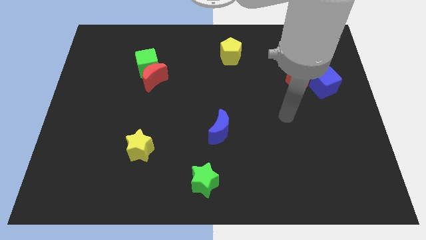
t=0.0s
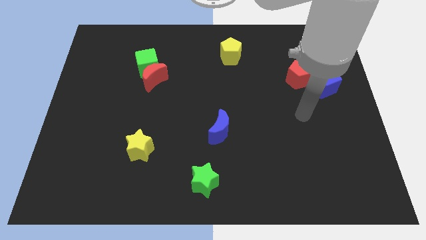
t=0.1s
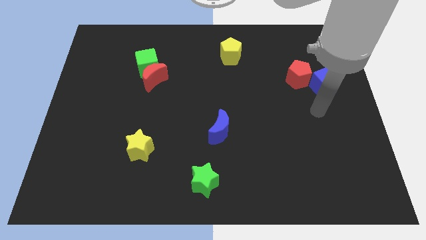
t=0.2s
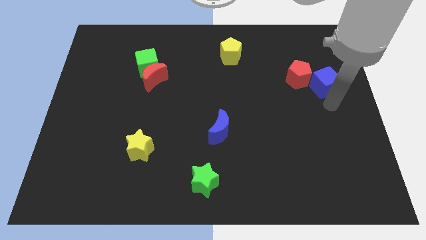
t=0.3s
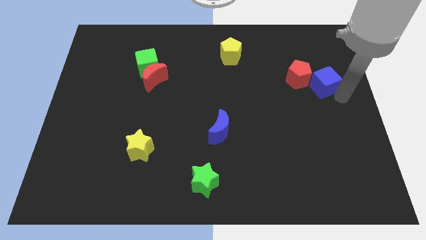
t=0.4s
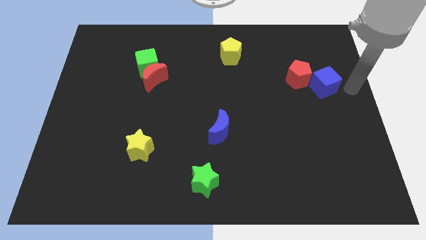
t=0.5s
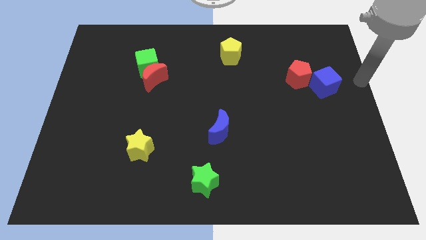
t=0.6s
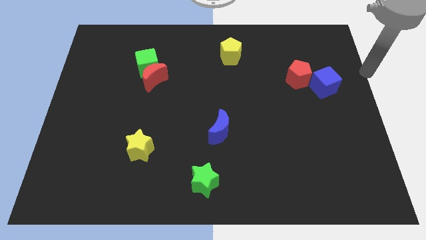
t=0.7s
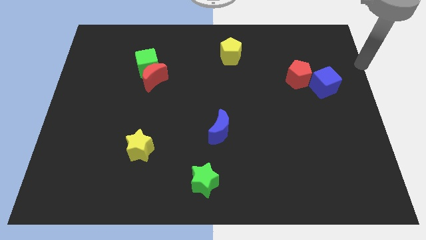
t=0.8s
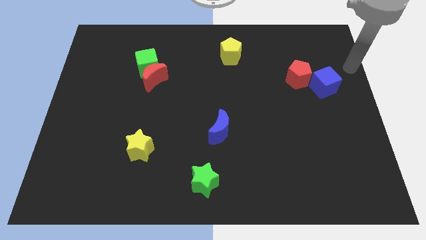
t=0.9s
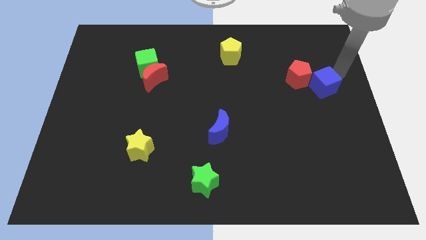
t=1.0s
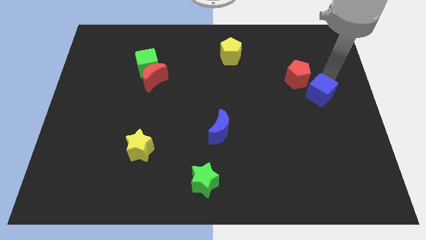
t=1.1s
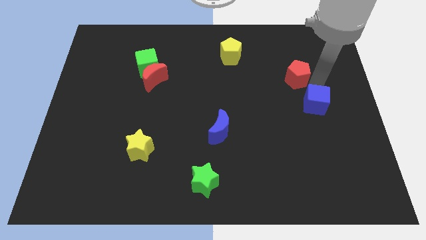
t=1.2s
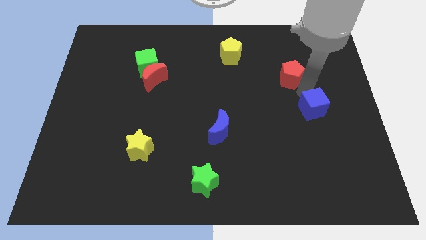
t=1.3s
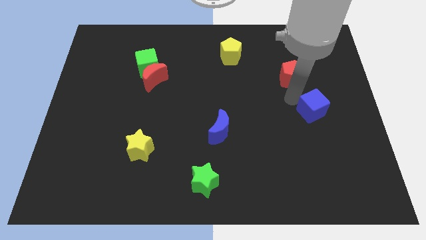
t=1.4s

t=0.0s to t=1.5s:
go and separate the blue cube from the red pentagon

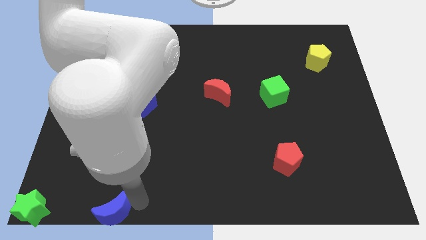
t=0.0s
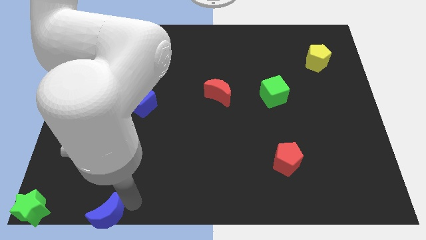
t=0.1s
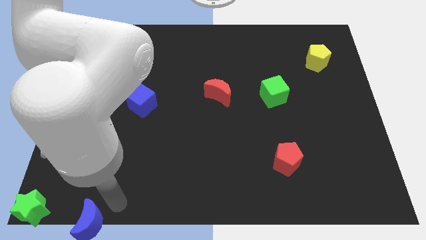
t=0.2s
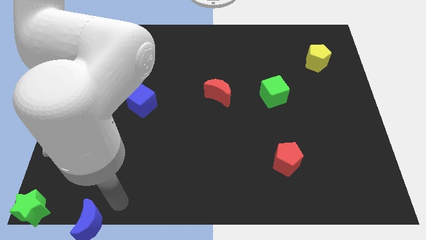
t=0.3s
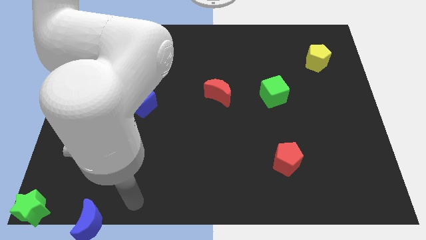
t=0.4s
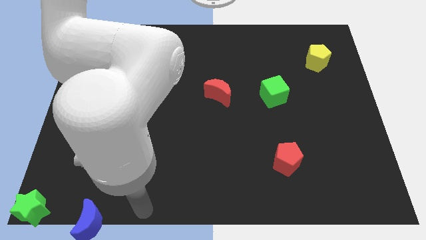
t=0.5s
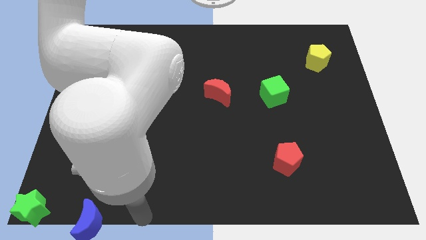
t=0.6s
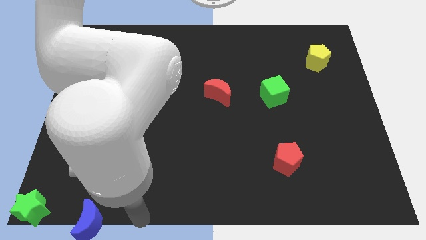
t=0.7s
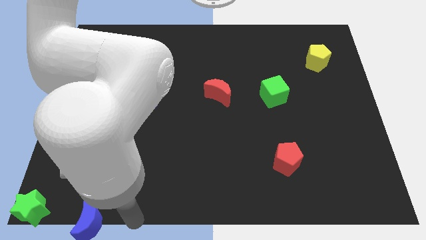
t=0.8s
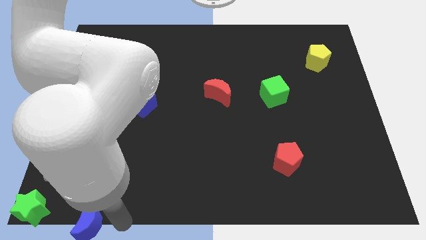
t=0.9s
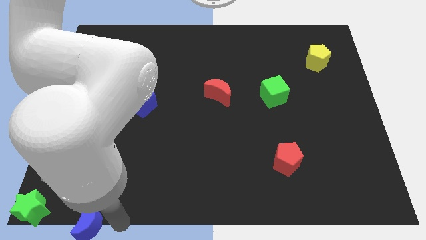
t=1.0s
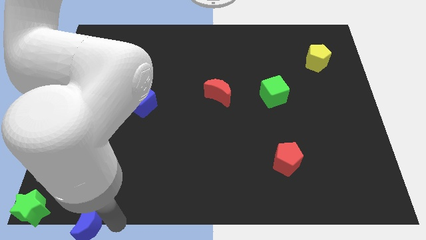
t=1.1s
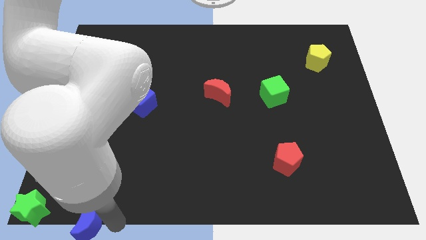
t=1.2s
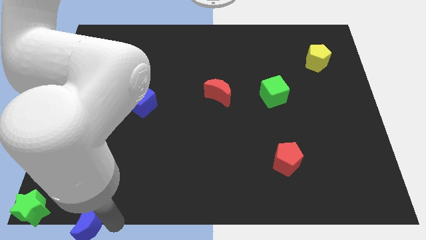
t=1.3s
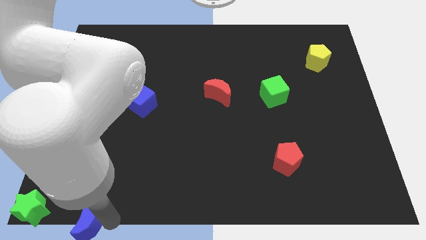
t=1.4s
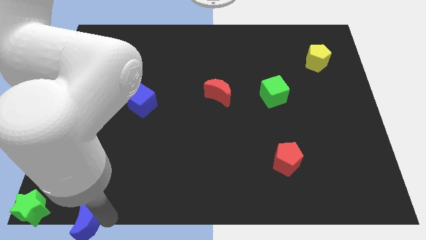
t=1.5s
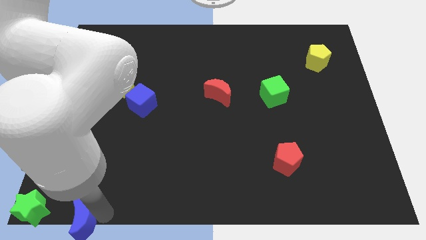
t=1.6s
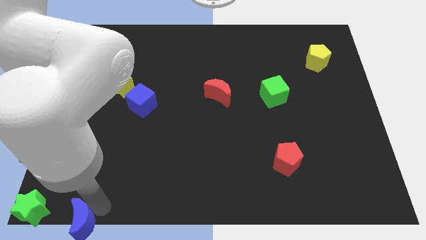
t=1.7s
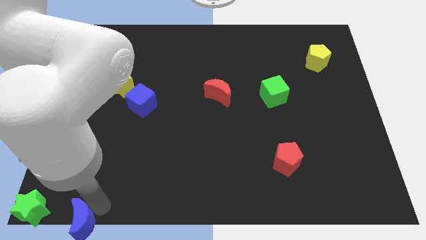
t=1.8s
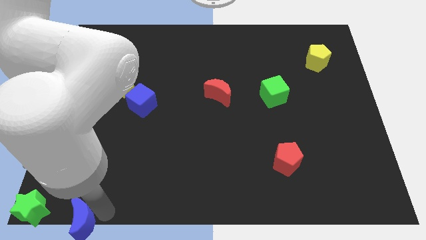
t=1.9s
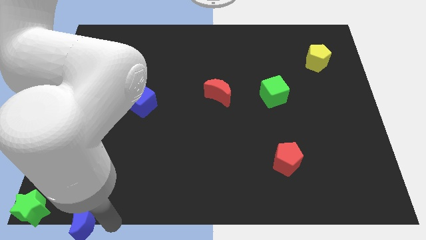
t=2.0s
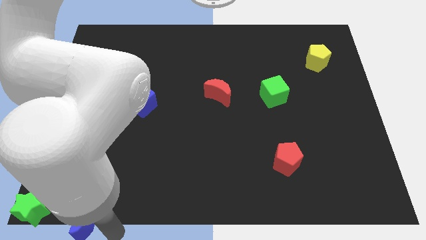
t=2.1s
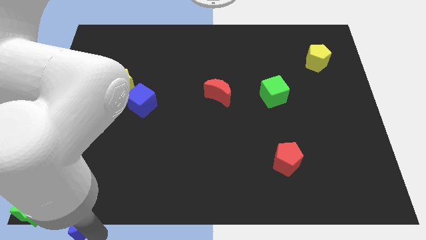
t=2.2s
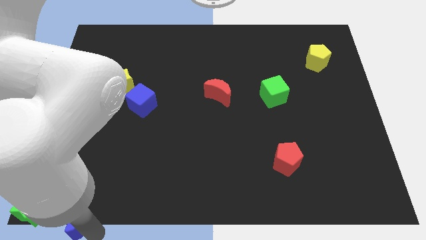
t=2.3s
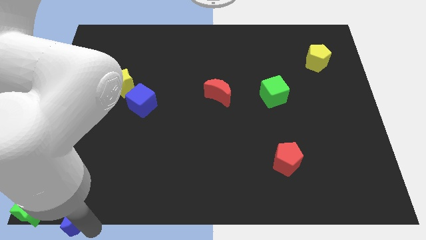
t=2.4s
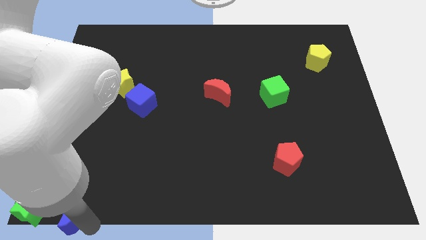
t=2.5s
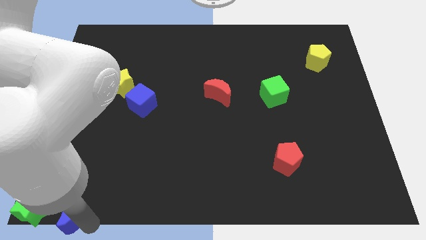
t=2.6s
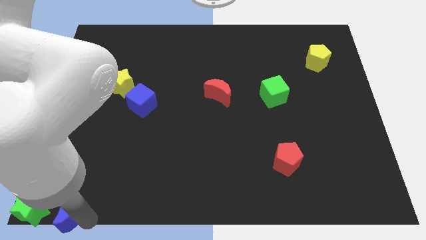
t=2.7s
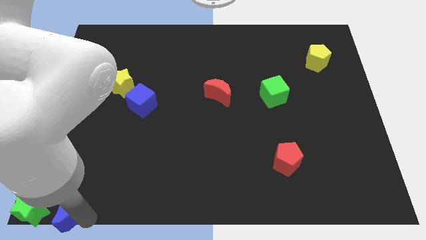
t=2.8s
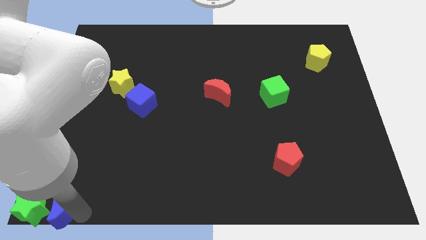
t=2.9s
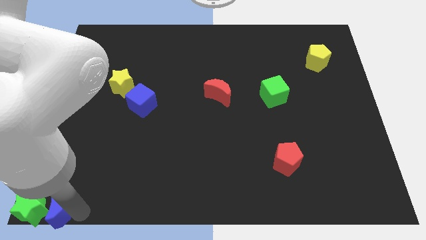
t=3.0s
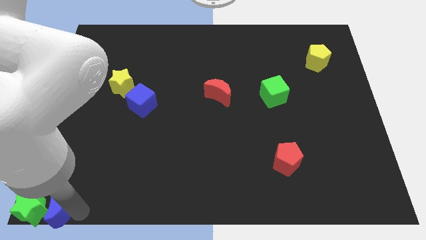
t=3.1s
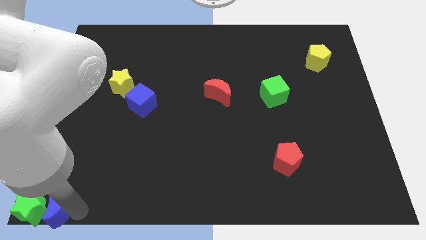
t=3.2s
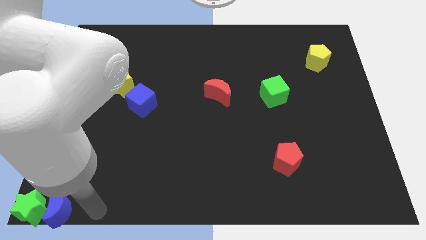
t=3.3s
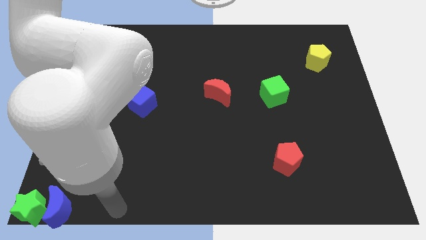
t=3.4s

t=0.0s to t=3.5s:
put the blue crescent near to the right side of the green star

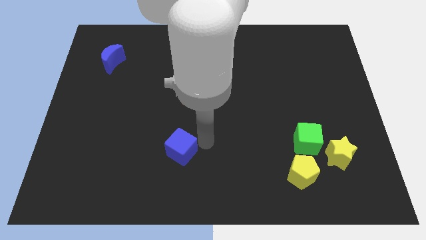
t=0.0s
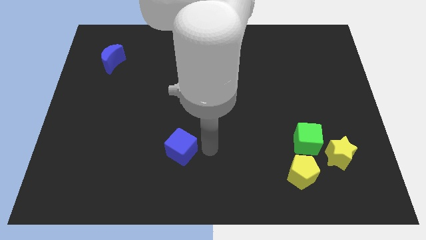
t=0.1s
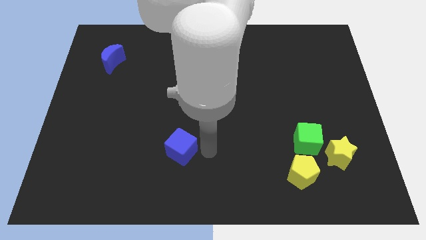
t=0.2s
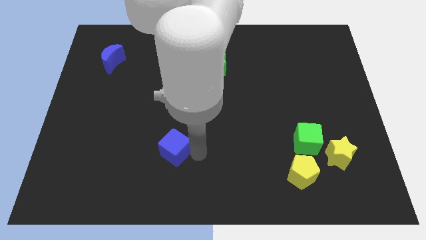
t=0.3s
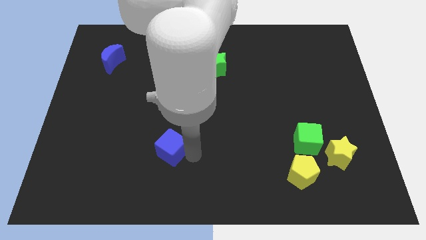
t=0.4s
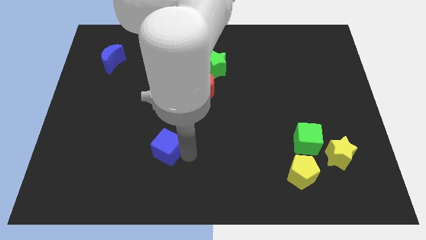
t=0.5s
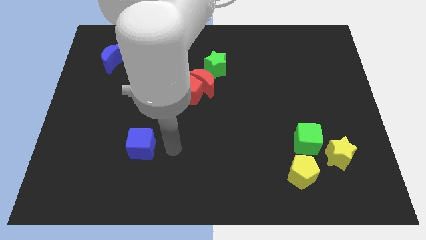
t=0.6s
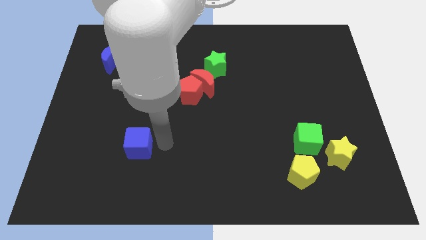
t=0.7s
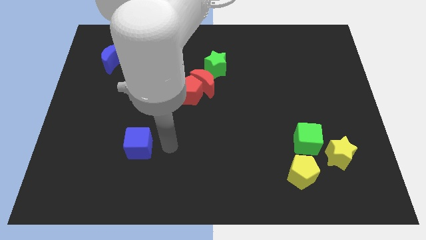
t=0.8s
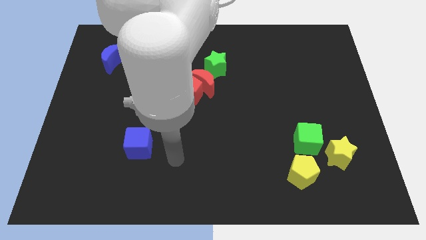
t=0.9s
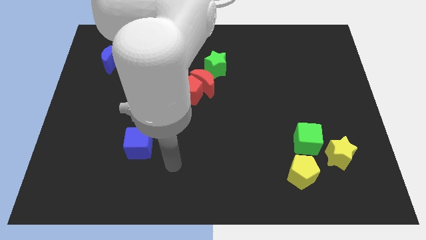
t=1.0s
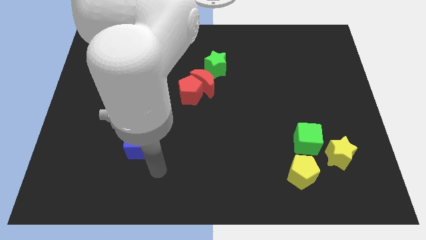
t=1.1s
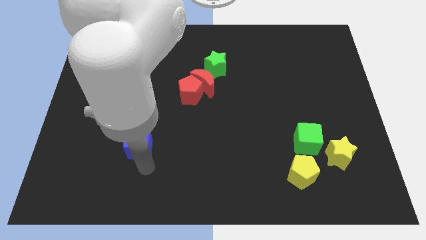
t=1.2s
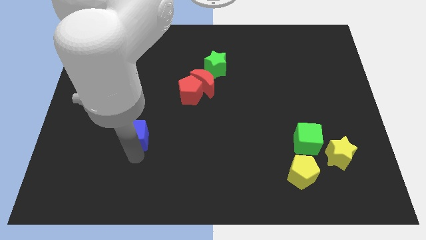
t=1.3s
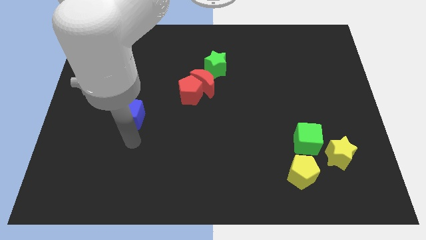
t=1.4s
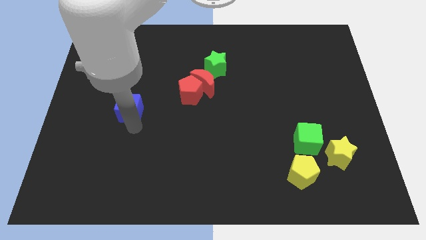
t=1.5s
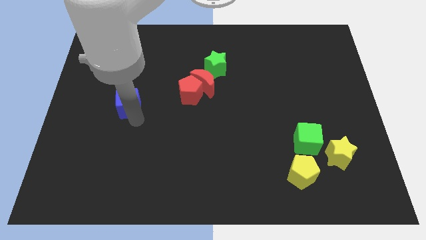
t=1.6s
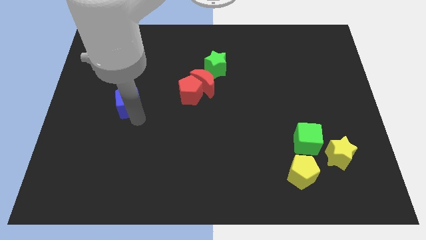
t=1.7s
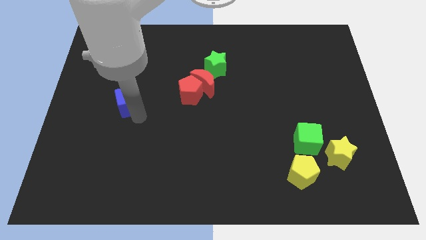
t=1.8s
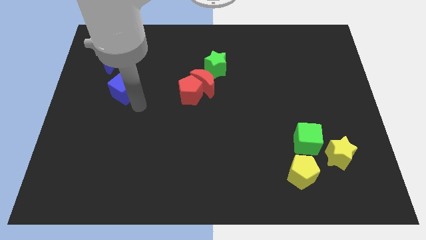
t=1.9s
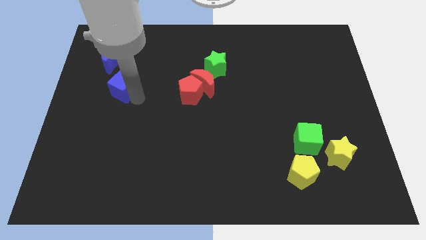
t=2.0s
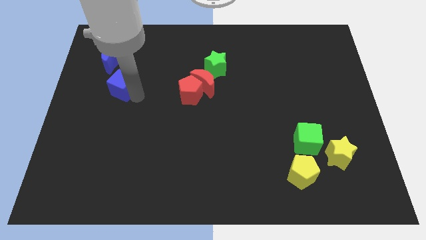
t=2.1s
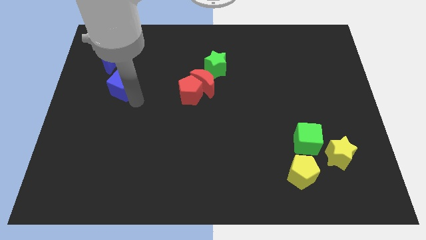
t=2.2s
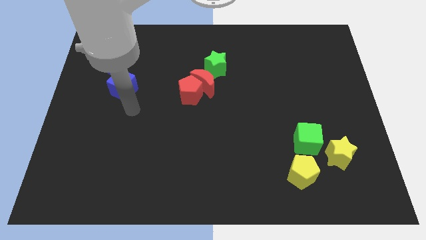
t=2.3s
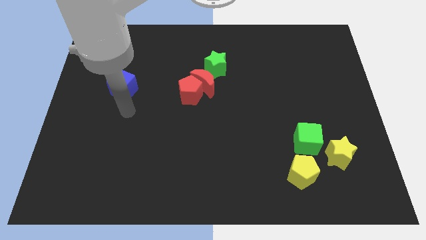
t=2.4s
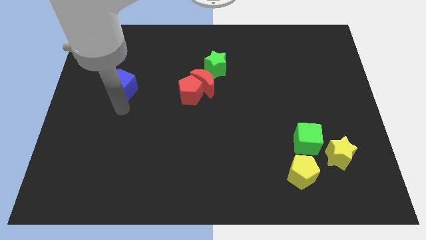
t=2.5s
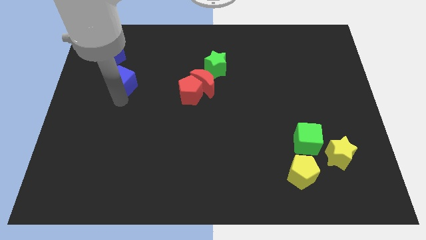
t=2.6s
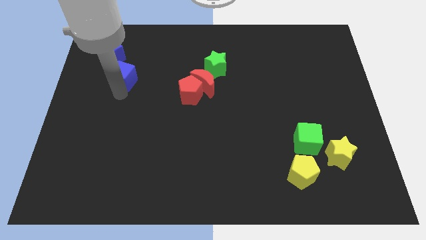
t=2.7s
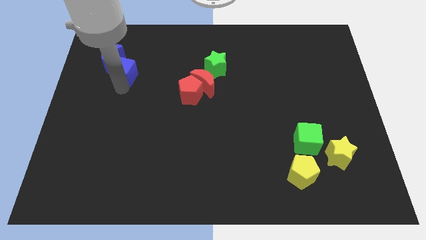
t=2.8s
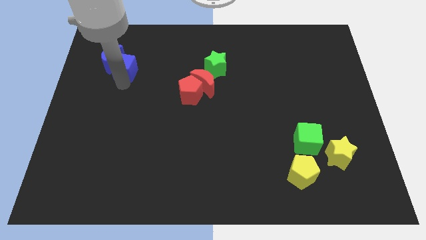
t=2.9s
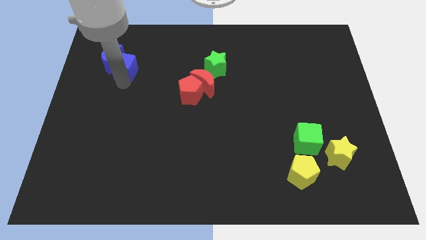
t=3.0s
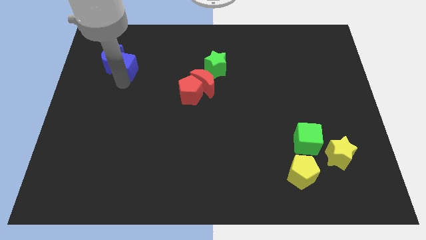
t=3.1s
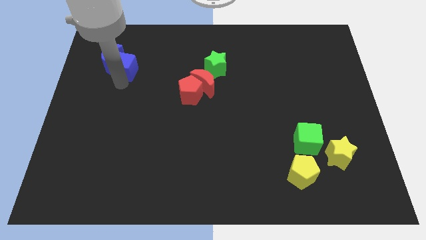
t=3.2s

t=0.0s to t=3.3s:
move the blue cube into the right side of the blue crescent

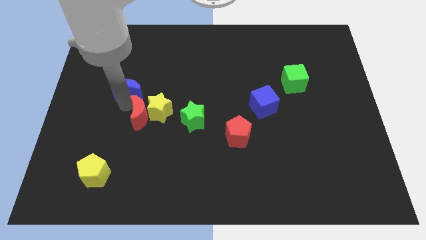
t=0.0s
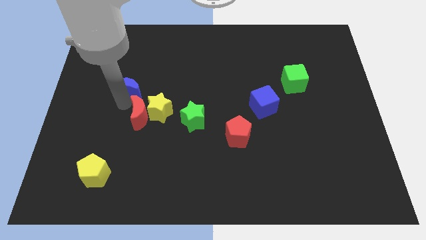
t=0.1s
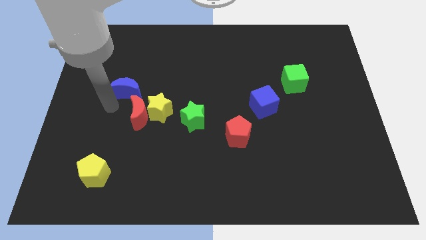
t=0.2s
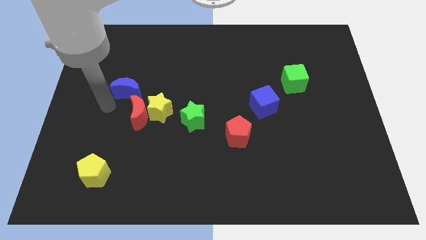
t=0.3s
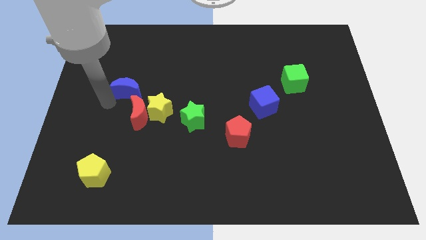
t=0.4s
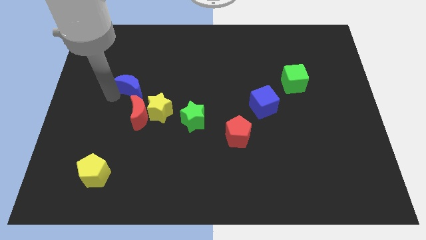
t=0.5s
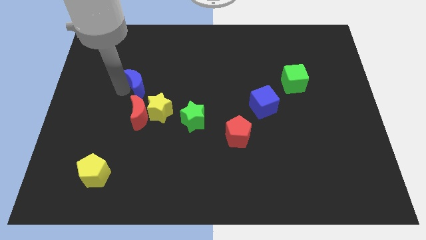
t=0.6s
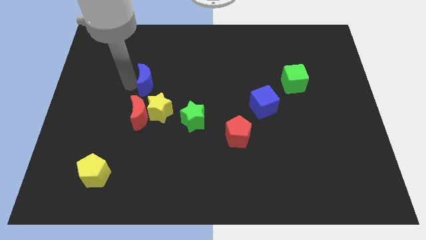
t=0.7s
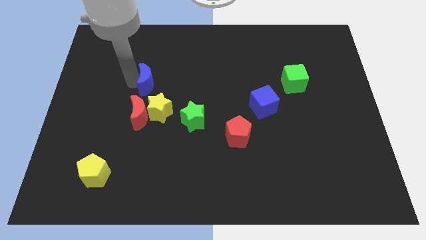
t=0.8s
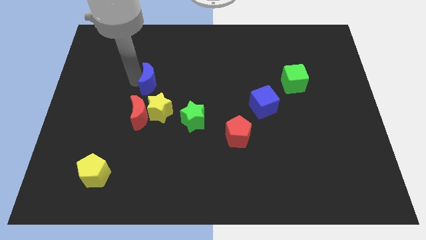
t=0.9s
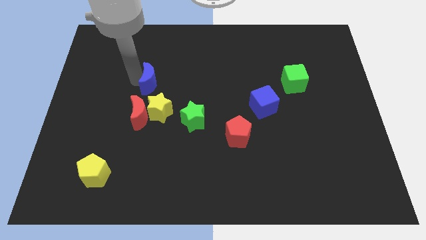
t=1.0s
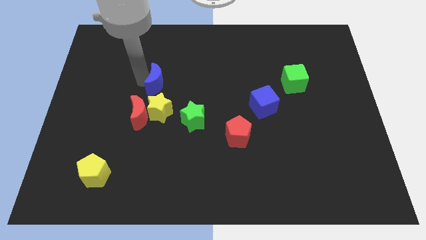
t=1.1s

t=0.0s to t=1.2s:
push the blue moon at the top of the red crescent
